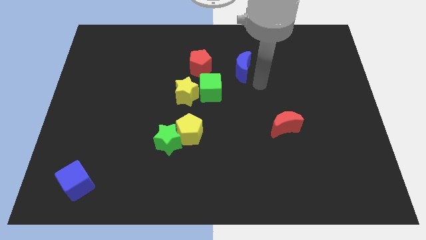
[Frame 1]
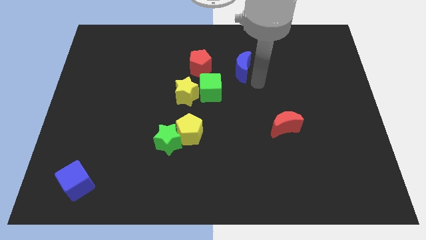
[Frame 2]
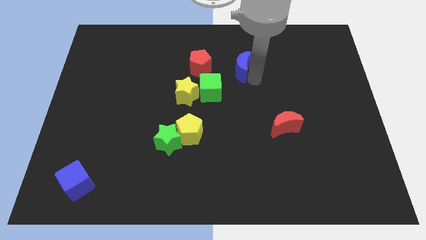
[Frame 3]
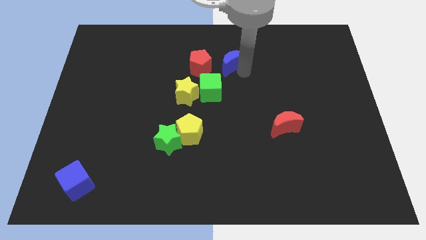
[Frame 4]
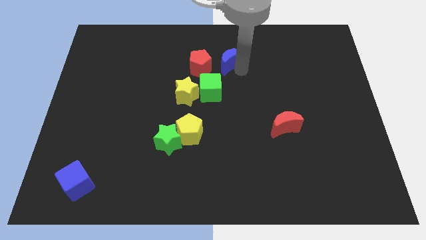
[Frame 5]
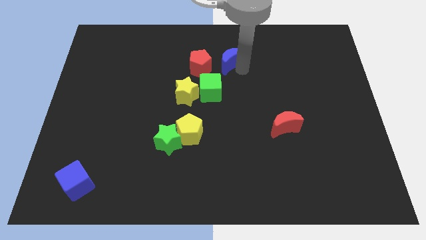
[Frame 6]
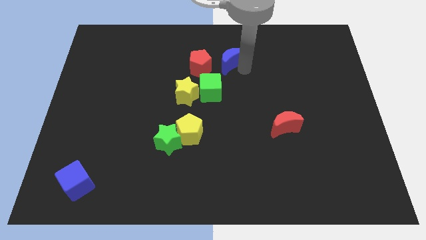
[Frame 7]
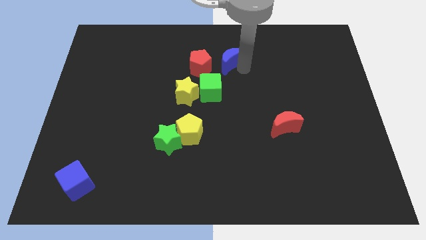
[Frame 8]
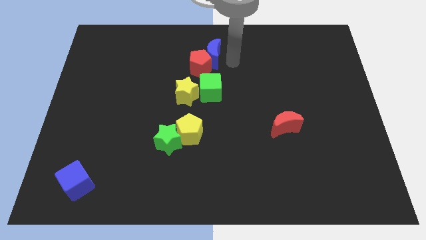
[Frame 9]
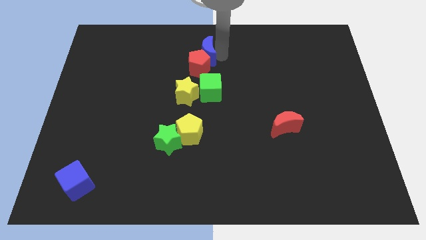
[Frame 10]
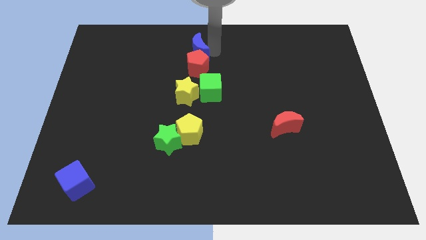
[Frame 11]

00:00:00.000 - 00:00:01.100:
move the blue moon at the top of the red pentagon

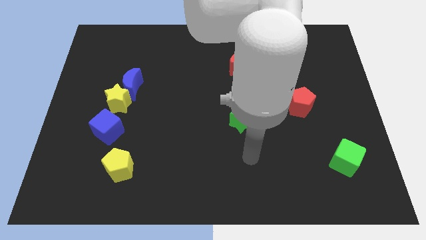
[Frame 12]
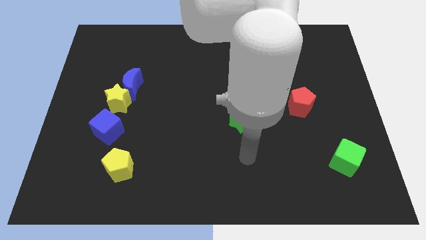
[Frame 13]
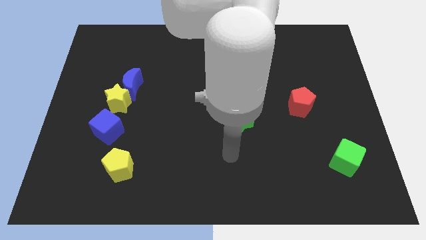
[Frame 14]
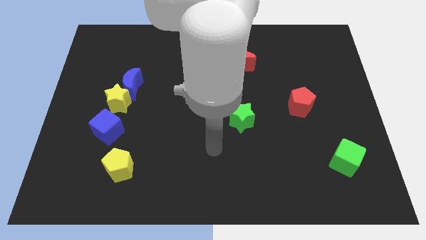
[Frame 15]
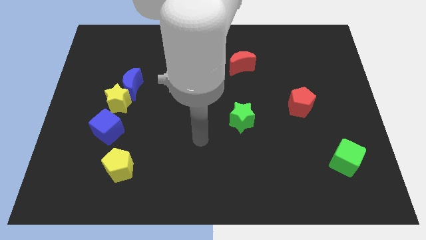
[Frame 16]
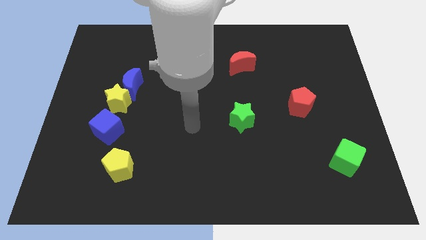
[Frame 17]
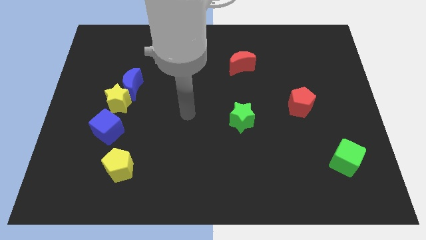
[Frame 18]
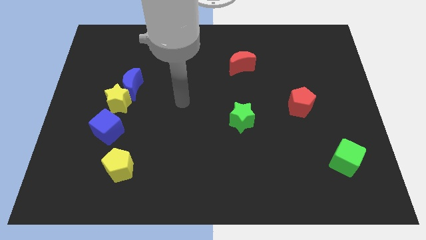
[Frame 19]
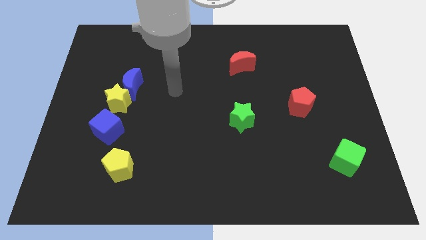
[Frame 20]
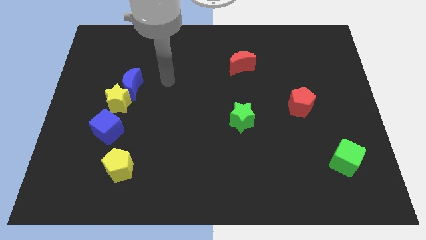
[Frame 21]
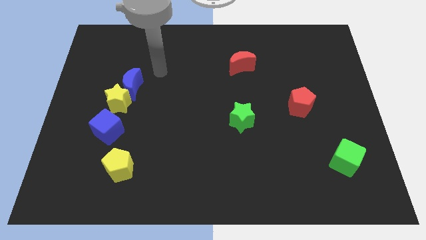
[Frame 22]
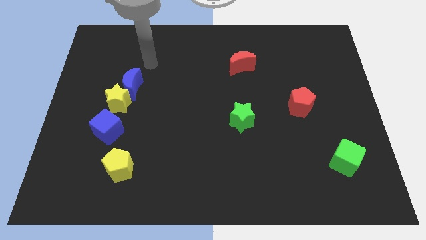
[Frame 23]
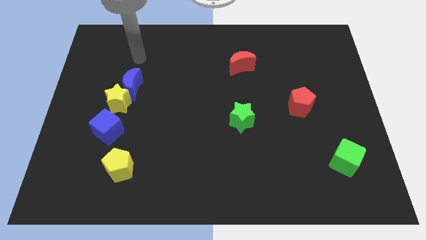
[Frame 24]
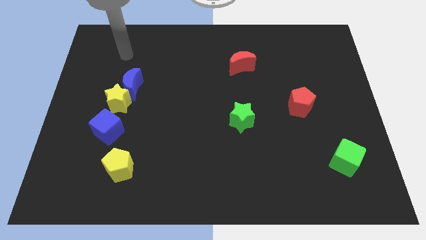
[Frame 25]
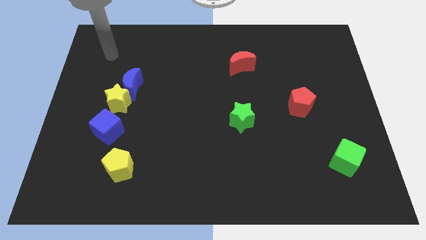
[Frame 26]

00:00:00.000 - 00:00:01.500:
move your arm to the top left corner of the board

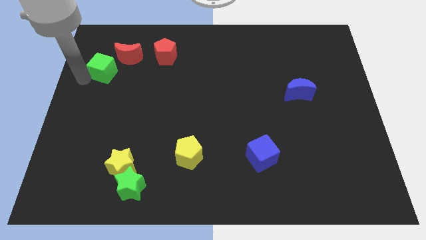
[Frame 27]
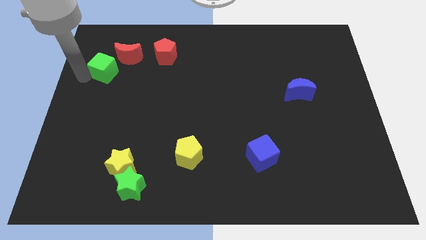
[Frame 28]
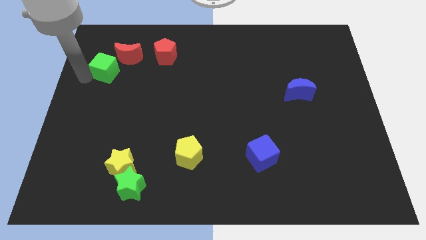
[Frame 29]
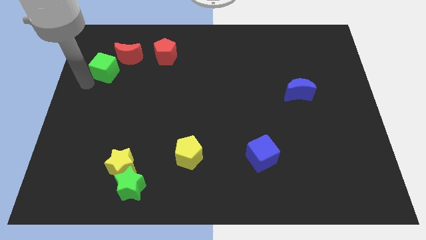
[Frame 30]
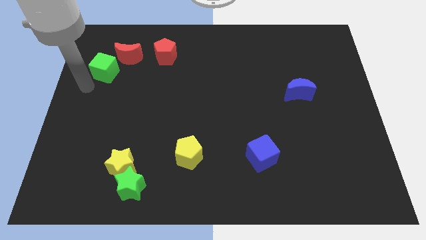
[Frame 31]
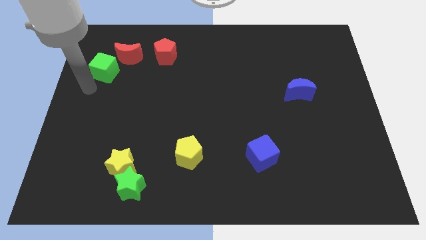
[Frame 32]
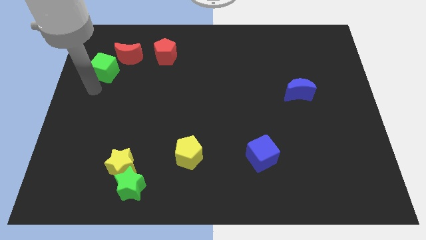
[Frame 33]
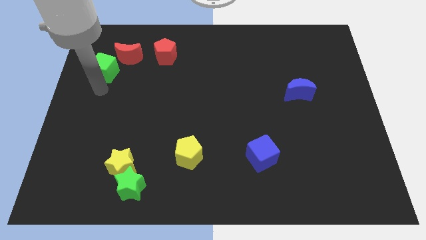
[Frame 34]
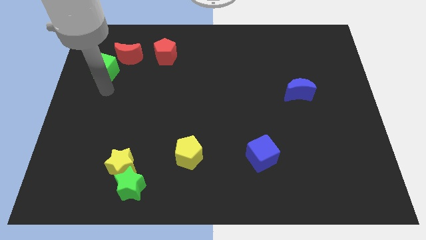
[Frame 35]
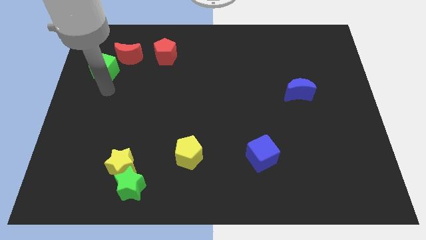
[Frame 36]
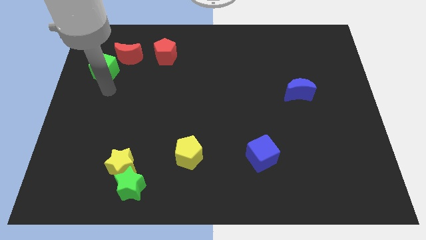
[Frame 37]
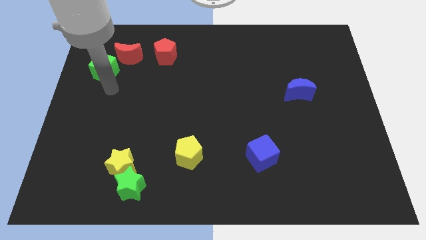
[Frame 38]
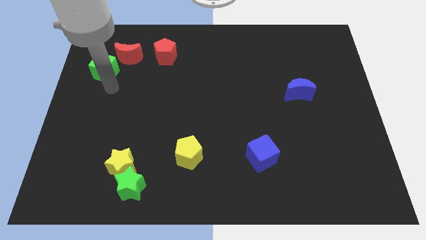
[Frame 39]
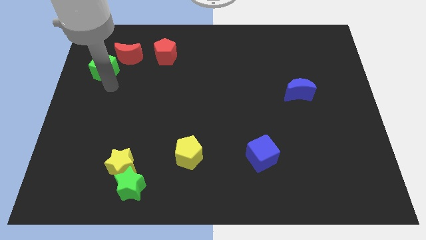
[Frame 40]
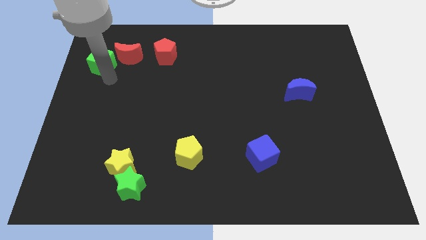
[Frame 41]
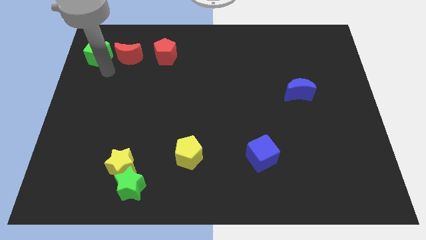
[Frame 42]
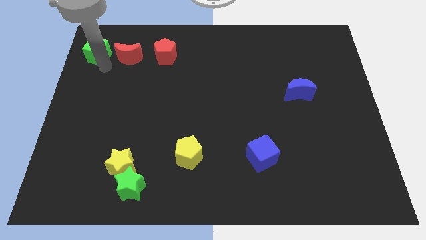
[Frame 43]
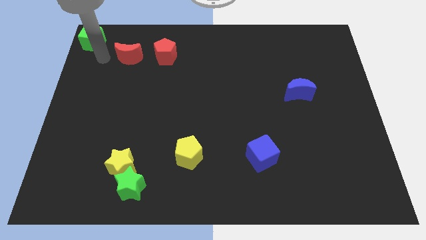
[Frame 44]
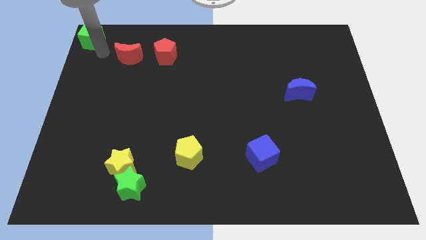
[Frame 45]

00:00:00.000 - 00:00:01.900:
push the green cube to the top left

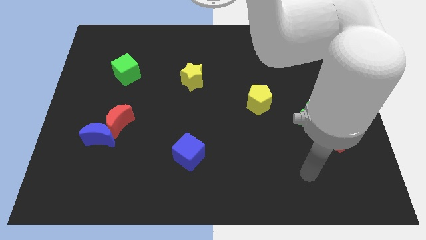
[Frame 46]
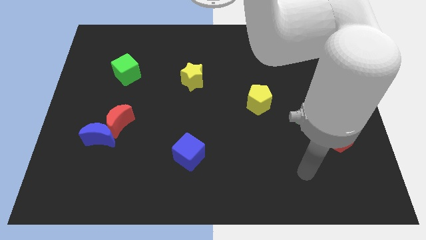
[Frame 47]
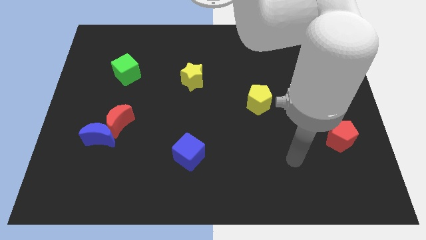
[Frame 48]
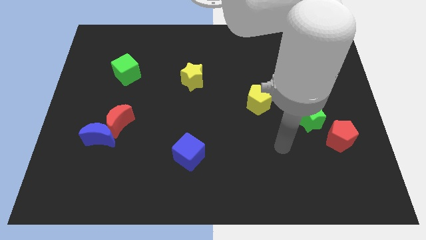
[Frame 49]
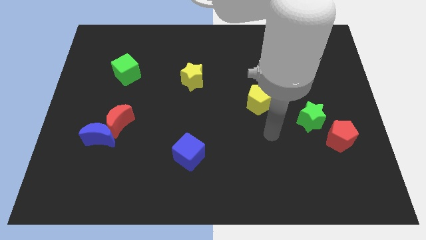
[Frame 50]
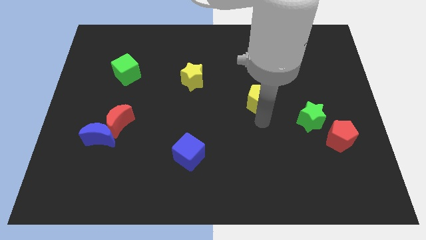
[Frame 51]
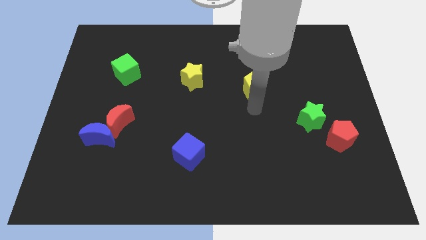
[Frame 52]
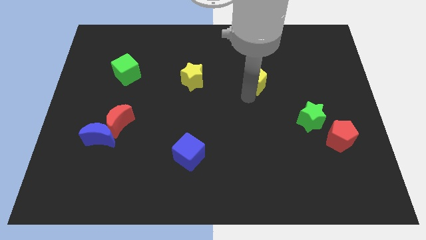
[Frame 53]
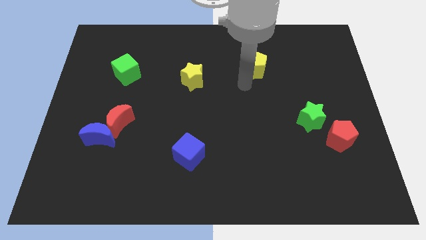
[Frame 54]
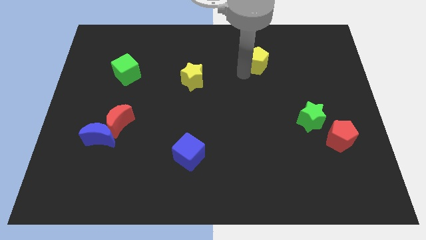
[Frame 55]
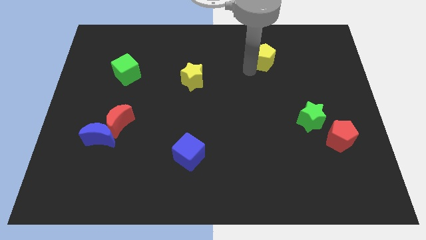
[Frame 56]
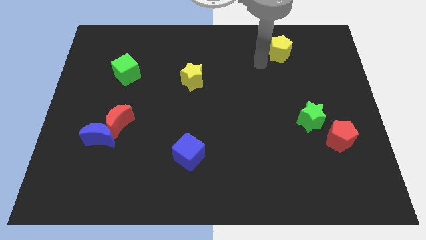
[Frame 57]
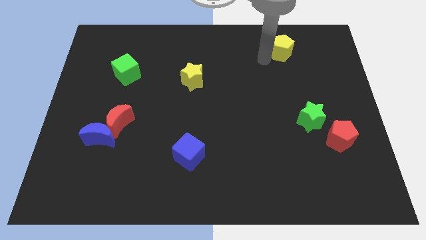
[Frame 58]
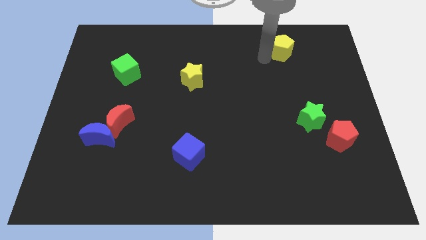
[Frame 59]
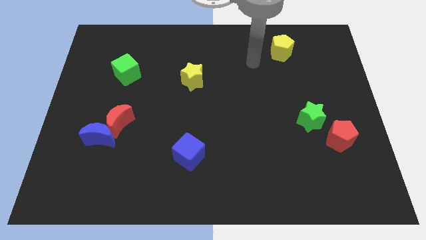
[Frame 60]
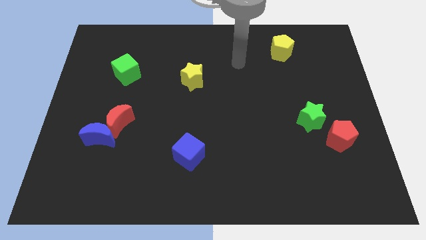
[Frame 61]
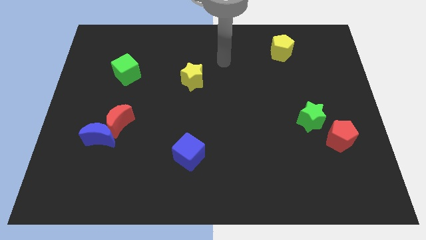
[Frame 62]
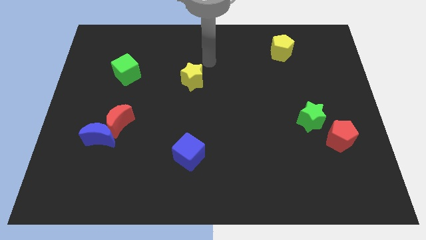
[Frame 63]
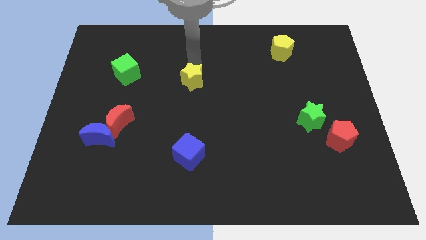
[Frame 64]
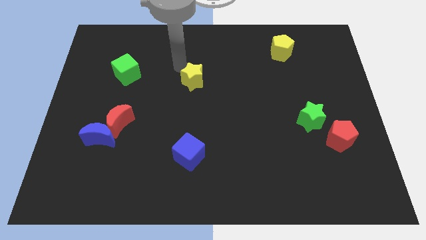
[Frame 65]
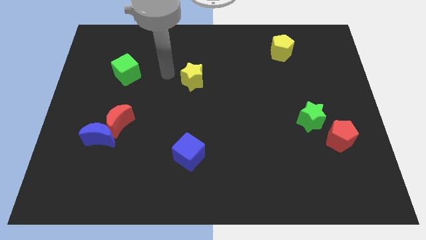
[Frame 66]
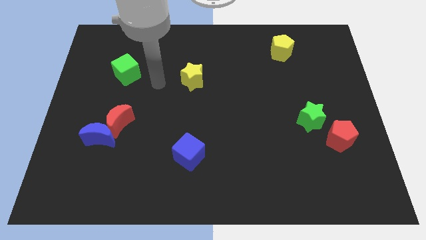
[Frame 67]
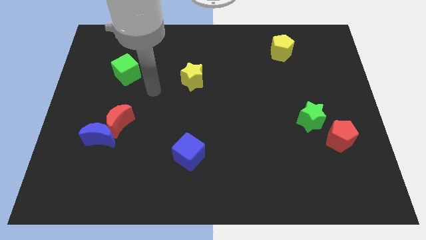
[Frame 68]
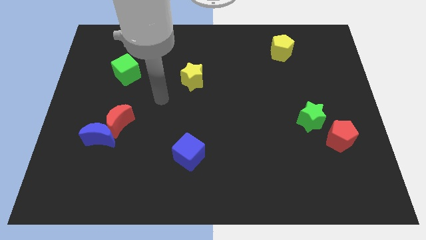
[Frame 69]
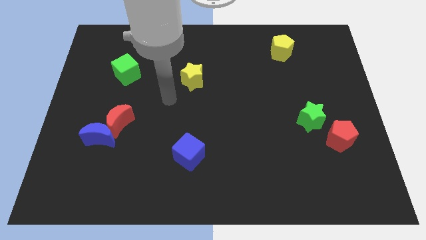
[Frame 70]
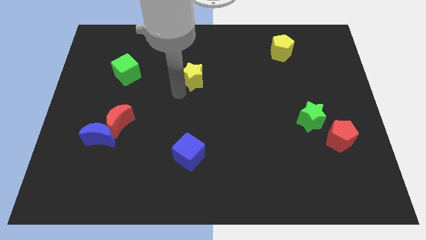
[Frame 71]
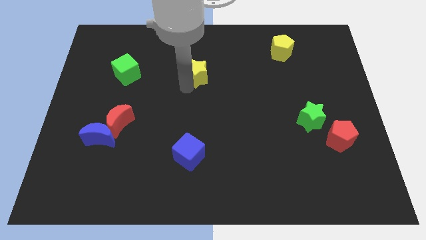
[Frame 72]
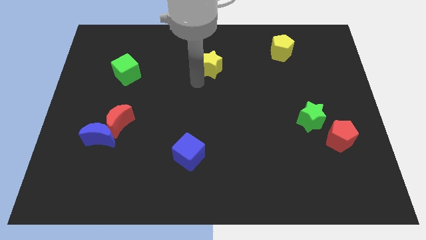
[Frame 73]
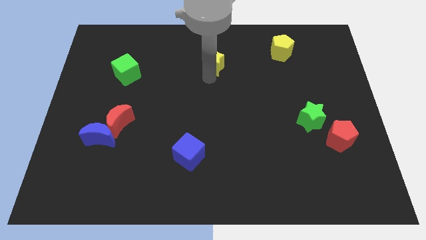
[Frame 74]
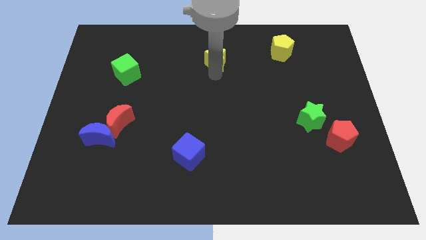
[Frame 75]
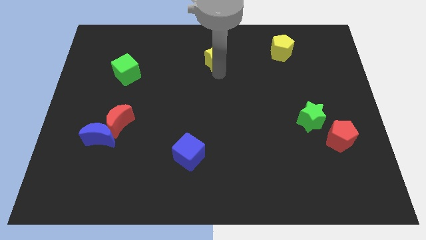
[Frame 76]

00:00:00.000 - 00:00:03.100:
move the yellow pentagon and star to the top side of the table

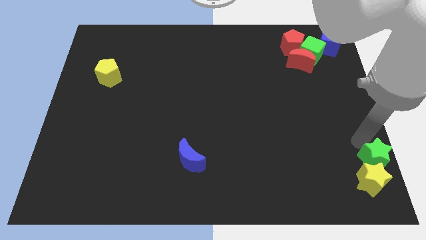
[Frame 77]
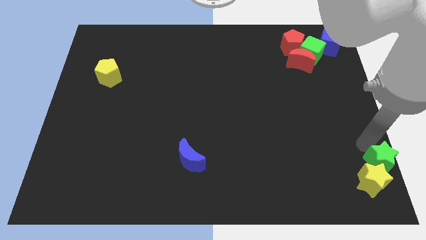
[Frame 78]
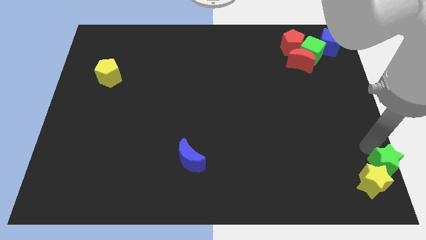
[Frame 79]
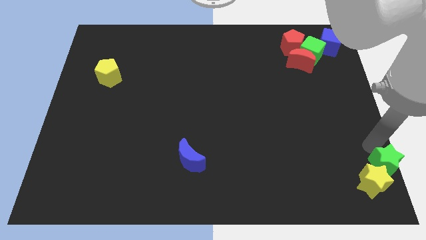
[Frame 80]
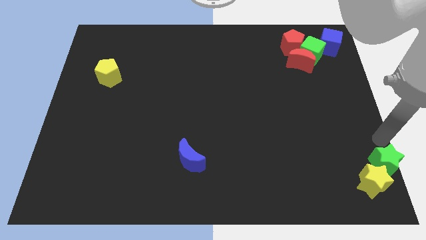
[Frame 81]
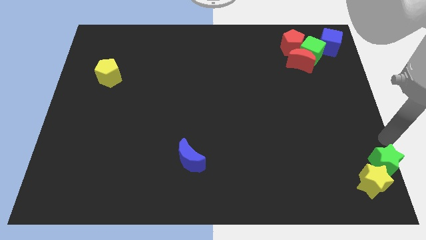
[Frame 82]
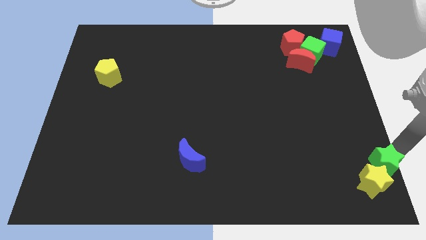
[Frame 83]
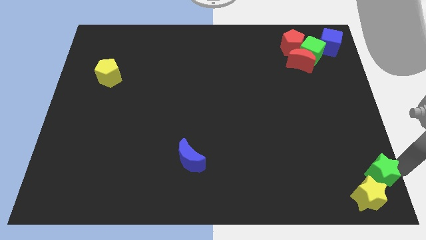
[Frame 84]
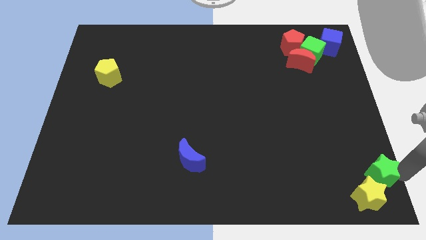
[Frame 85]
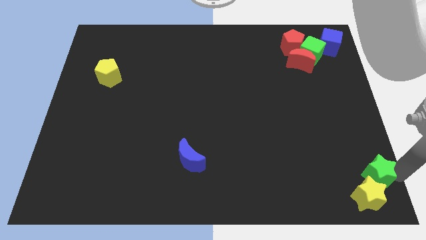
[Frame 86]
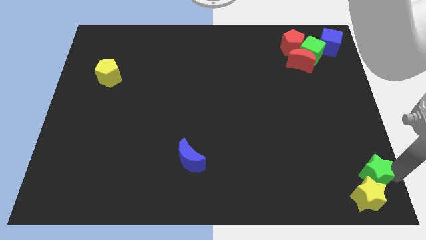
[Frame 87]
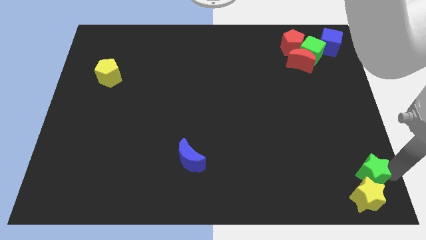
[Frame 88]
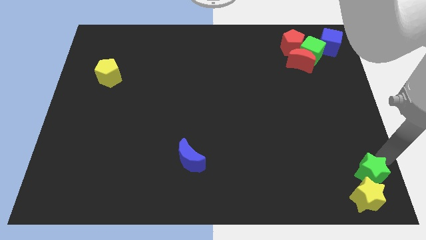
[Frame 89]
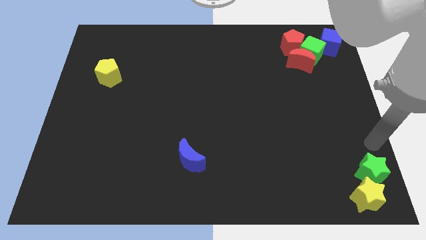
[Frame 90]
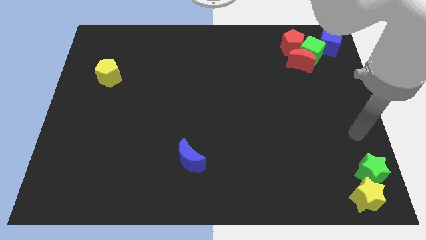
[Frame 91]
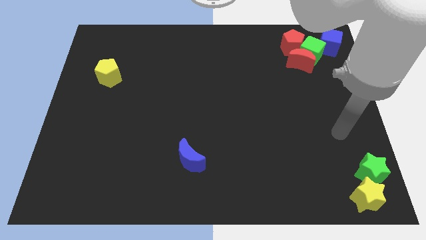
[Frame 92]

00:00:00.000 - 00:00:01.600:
move both green star and yellow star to the bottom right of the board
